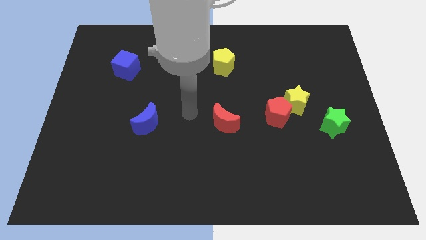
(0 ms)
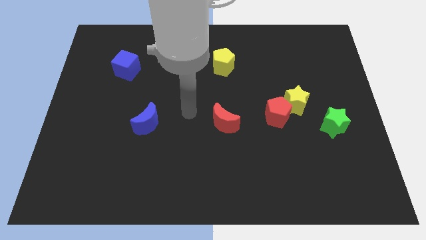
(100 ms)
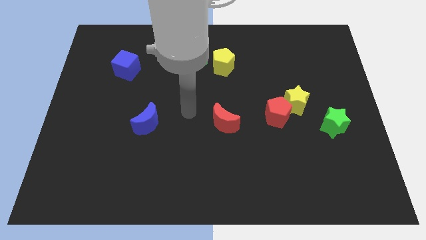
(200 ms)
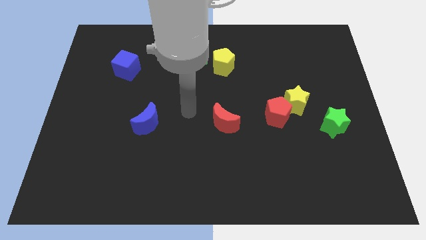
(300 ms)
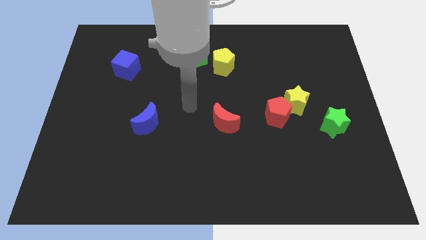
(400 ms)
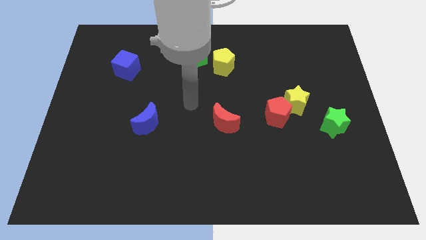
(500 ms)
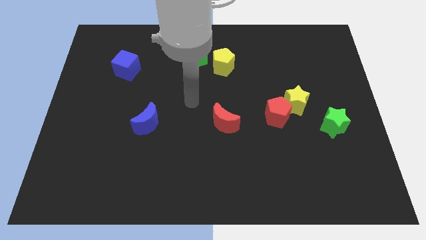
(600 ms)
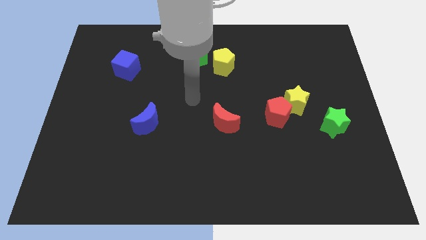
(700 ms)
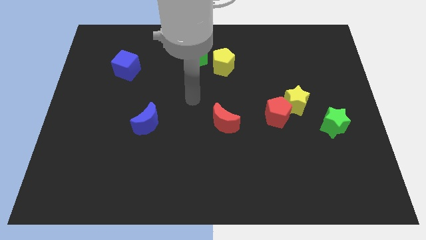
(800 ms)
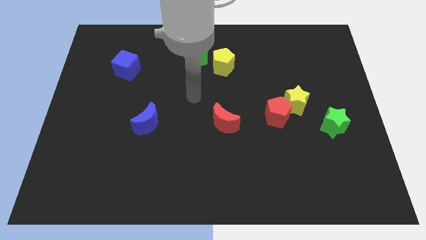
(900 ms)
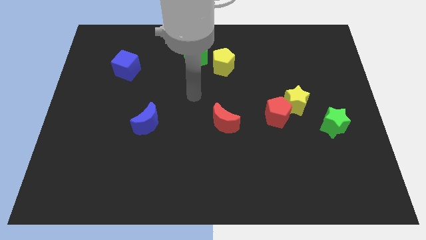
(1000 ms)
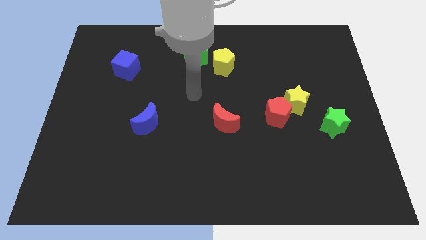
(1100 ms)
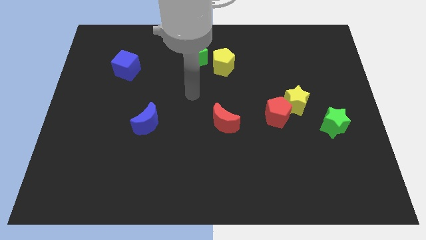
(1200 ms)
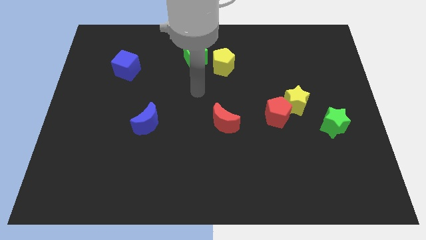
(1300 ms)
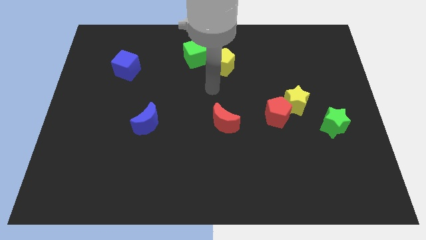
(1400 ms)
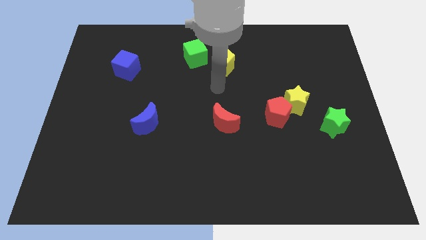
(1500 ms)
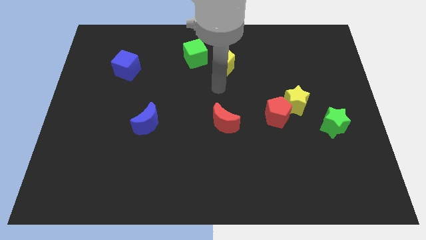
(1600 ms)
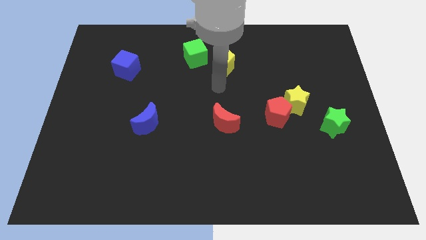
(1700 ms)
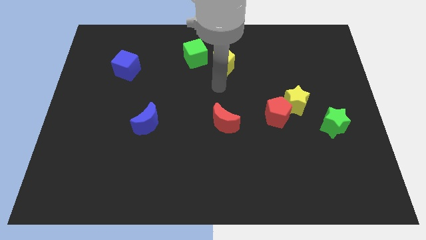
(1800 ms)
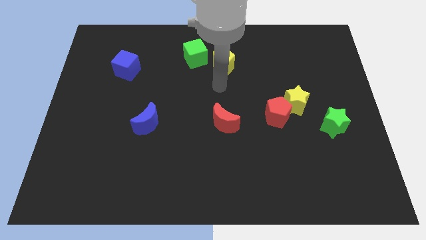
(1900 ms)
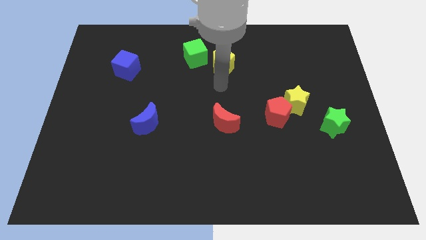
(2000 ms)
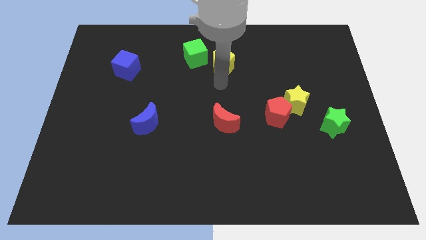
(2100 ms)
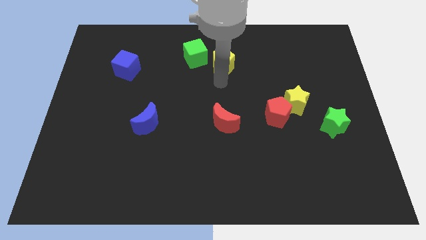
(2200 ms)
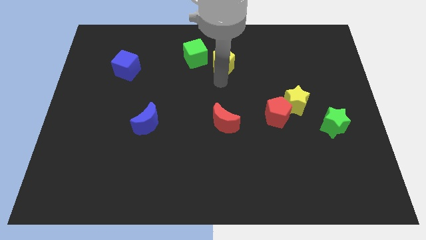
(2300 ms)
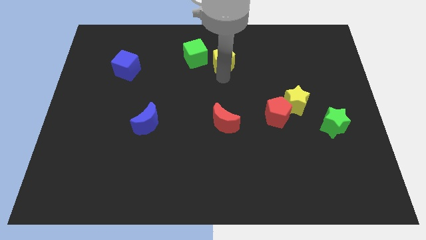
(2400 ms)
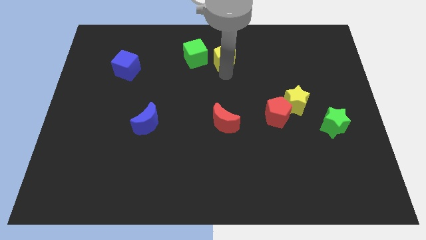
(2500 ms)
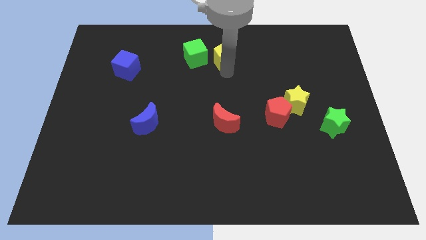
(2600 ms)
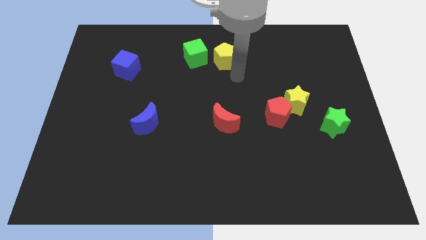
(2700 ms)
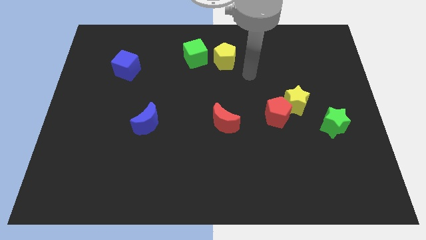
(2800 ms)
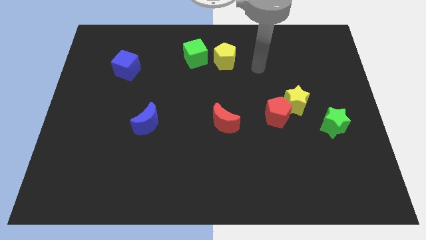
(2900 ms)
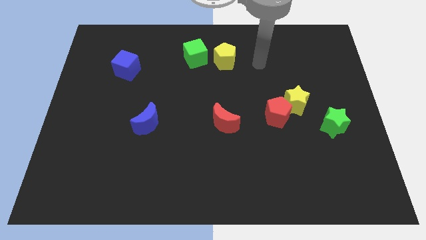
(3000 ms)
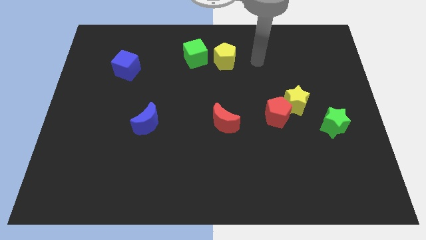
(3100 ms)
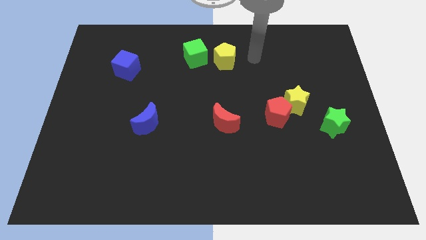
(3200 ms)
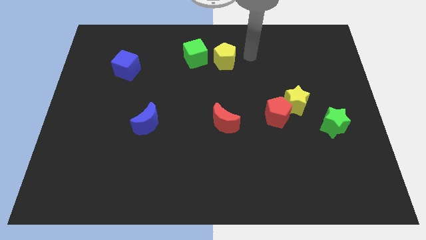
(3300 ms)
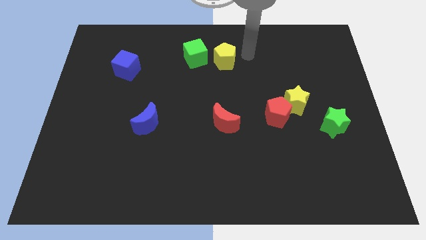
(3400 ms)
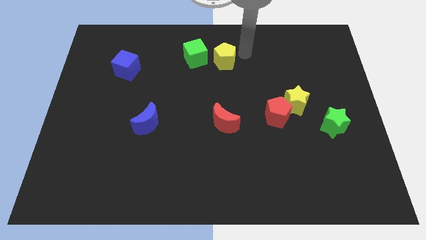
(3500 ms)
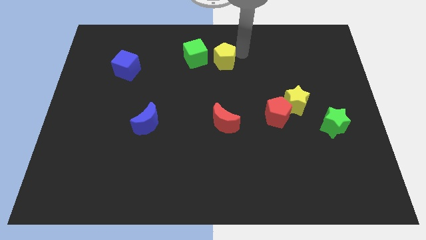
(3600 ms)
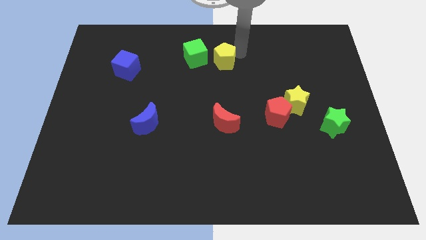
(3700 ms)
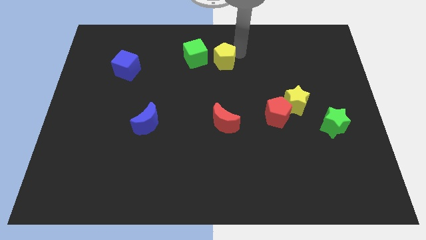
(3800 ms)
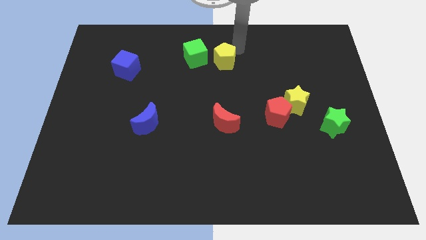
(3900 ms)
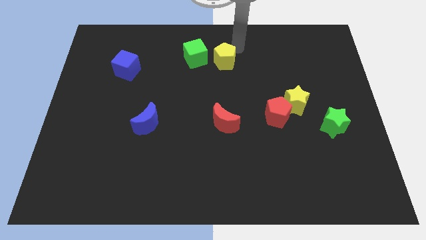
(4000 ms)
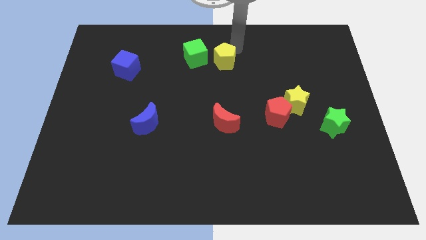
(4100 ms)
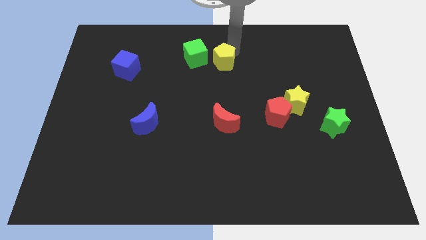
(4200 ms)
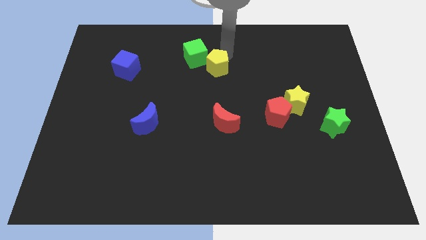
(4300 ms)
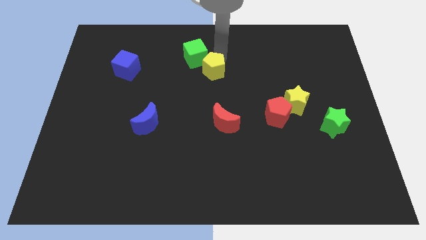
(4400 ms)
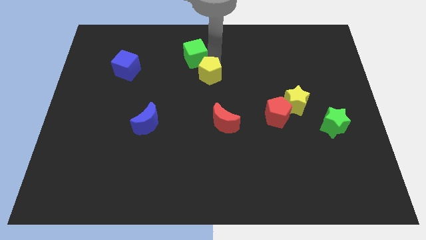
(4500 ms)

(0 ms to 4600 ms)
place the yellow pentagon above the red moon

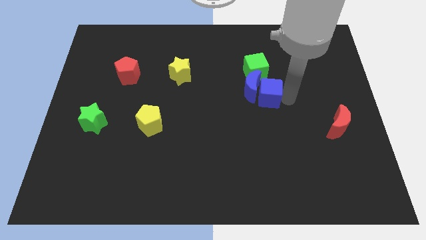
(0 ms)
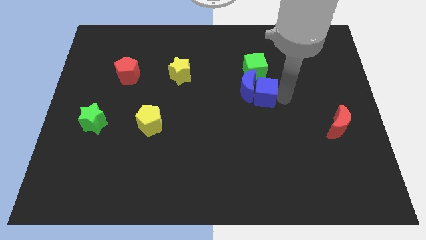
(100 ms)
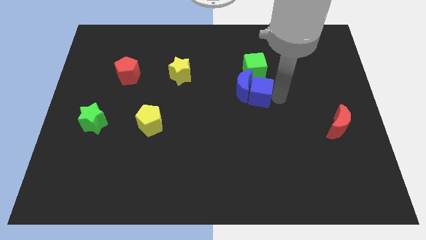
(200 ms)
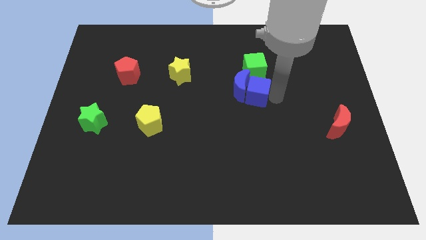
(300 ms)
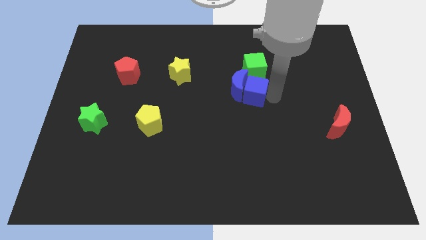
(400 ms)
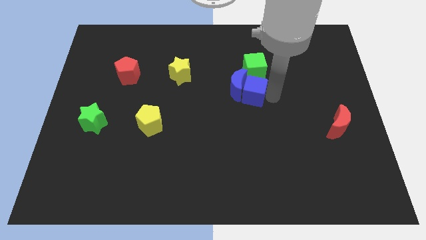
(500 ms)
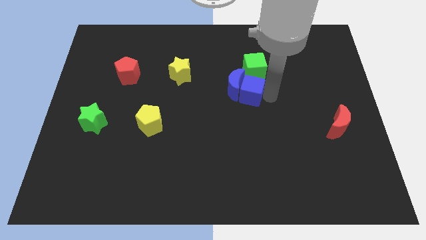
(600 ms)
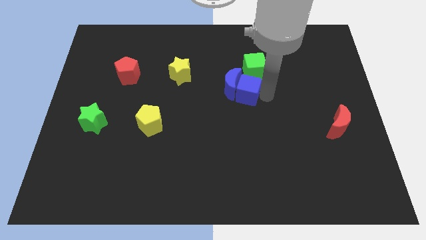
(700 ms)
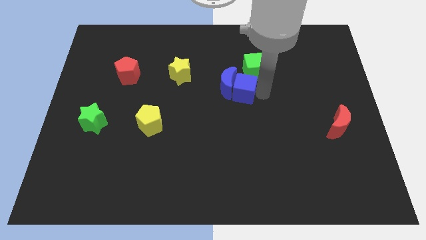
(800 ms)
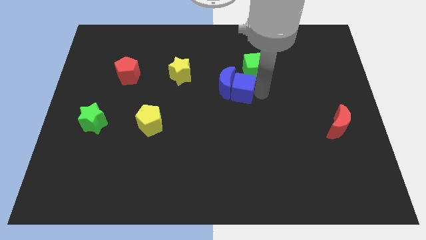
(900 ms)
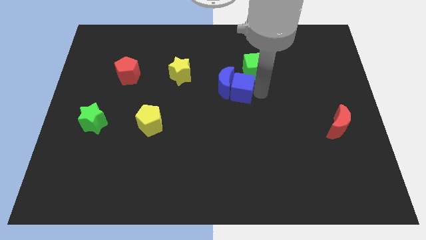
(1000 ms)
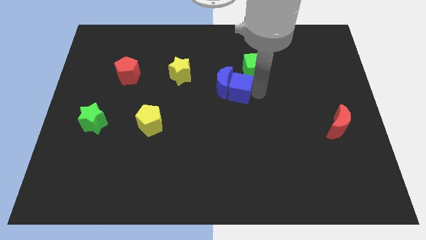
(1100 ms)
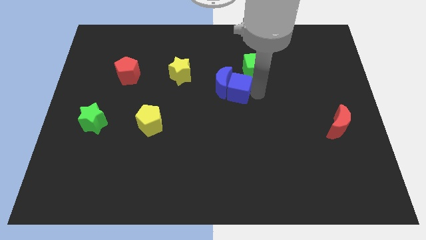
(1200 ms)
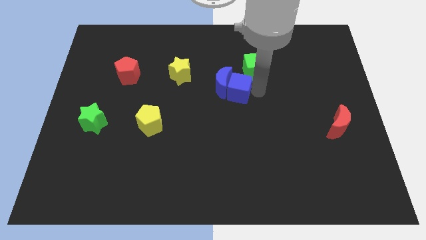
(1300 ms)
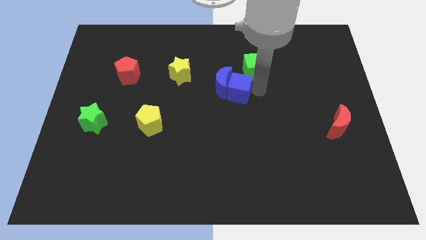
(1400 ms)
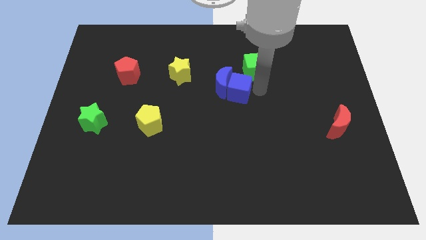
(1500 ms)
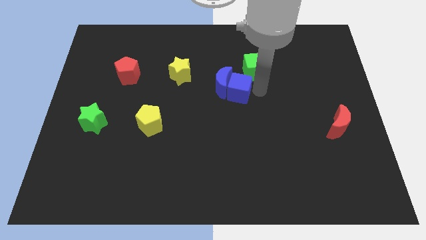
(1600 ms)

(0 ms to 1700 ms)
push the blue cube along with blue crescent towards left

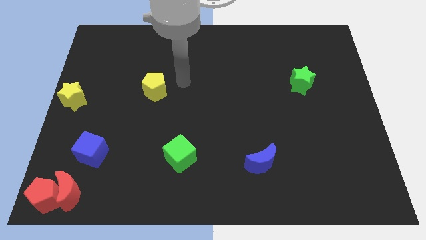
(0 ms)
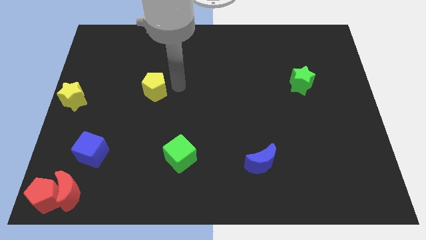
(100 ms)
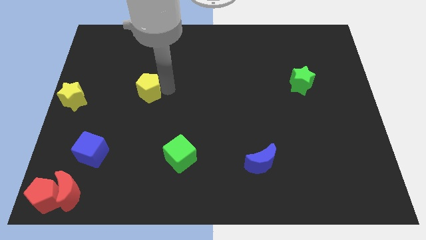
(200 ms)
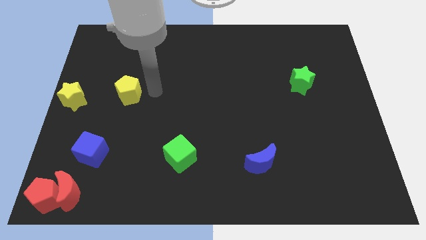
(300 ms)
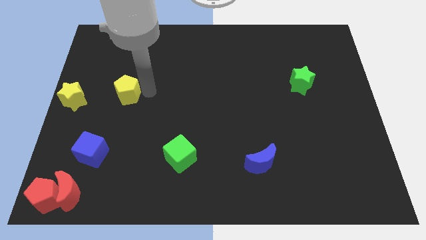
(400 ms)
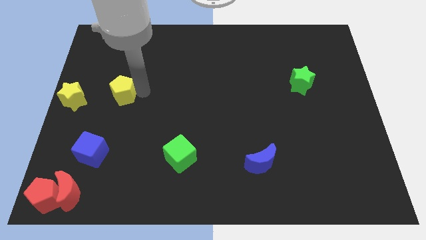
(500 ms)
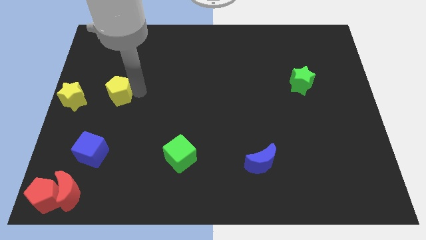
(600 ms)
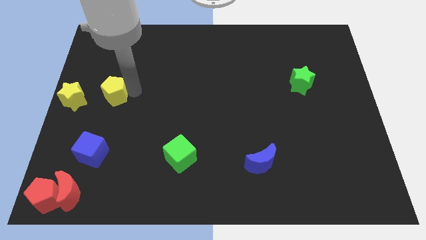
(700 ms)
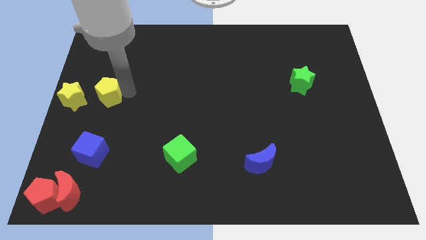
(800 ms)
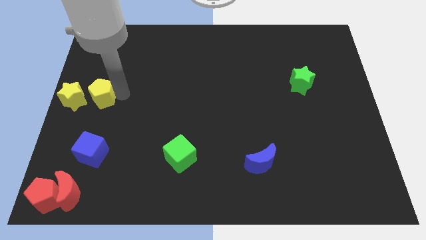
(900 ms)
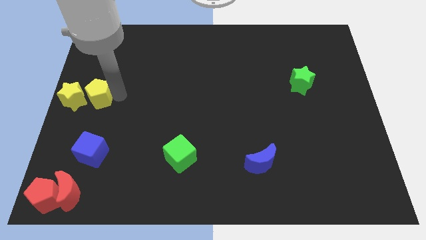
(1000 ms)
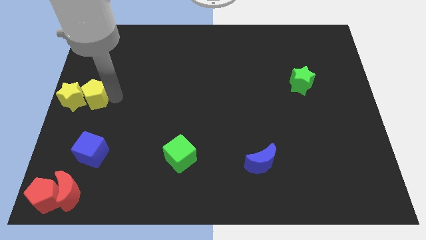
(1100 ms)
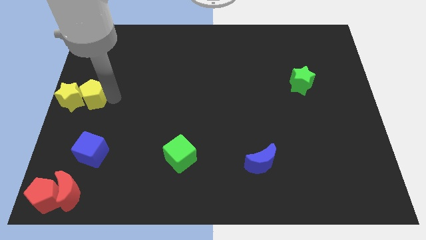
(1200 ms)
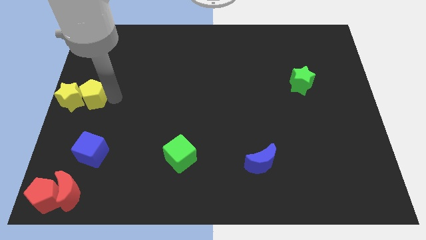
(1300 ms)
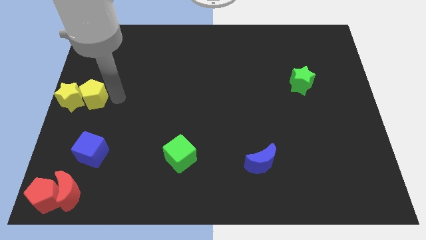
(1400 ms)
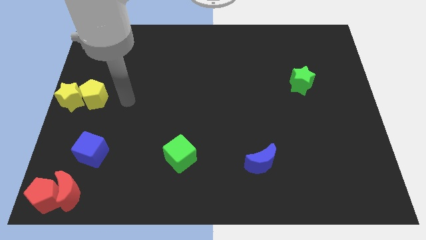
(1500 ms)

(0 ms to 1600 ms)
place the yellow pentagon to the right side of the yellow star

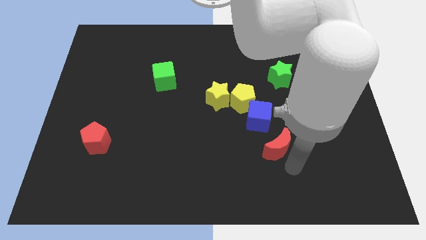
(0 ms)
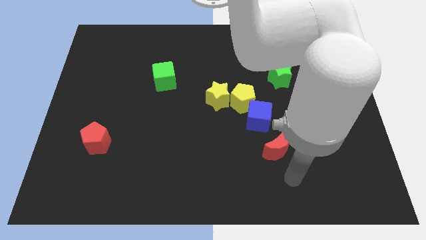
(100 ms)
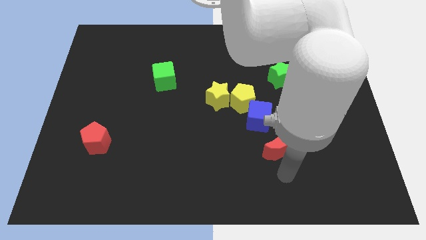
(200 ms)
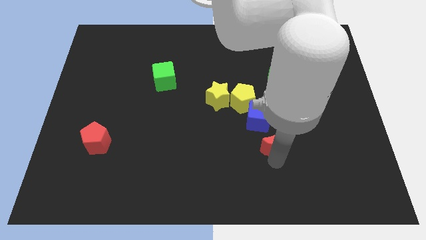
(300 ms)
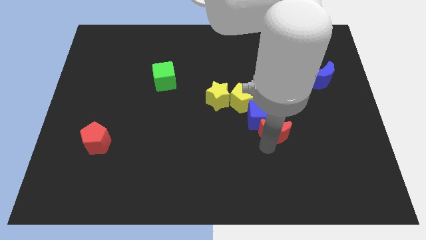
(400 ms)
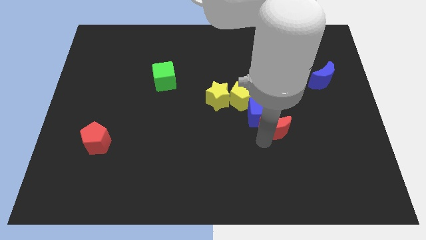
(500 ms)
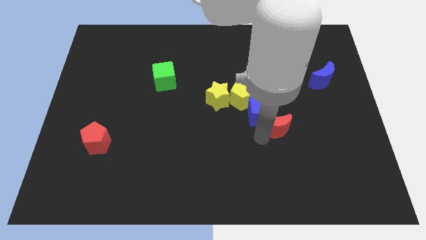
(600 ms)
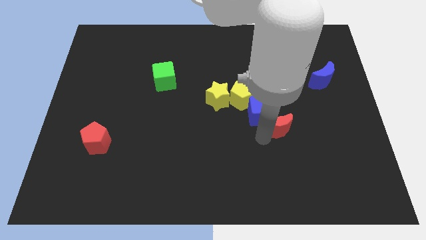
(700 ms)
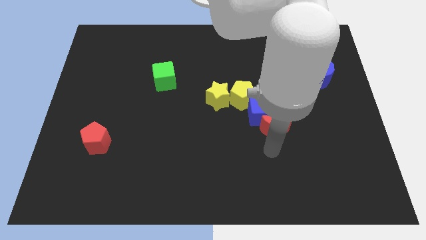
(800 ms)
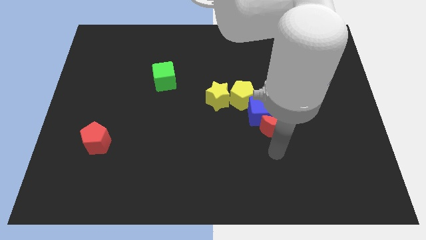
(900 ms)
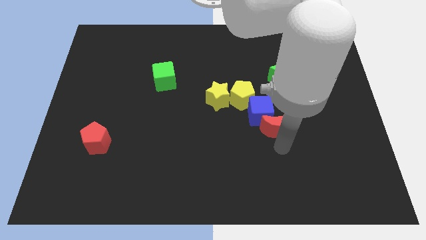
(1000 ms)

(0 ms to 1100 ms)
move the red moon to the bottom of the blue cube
